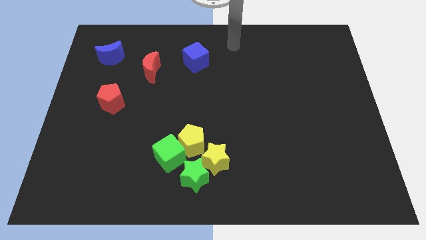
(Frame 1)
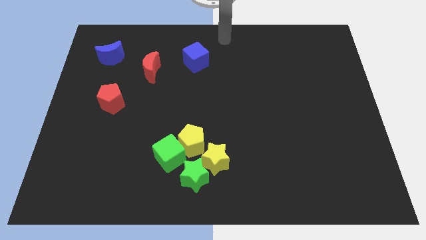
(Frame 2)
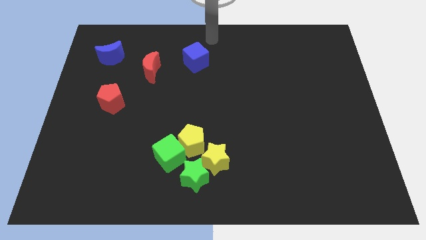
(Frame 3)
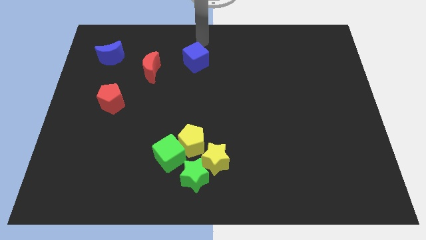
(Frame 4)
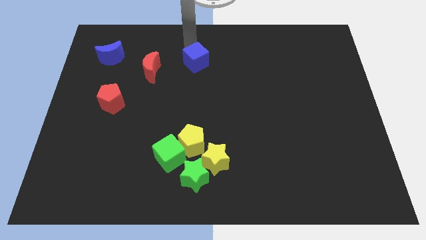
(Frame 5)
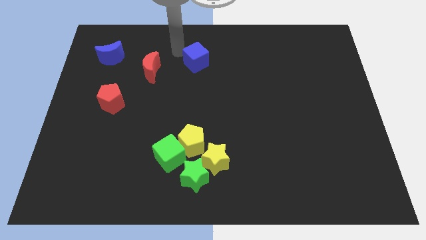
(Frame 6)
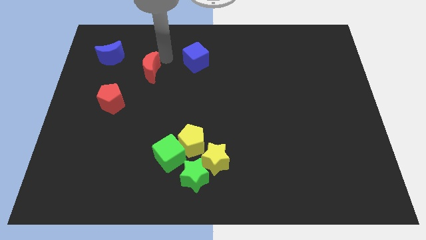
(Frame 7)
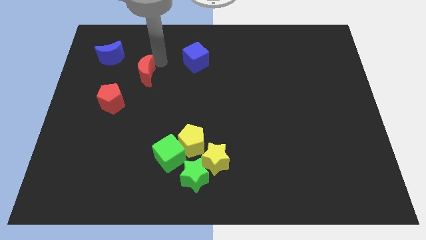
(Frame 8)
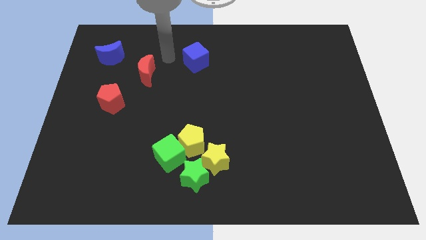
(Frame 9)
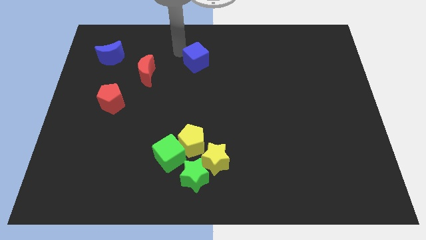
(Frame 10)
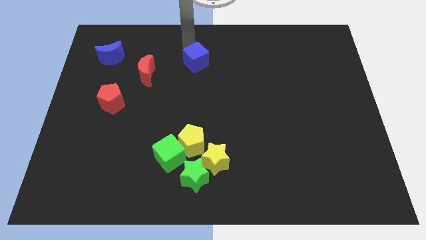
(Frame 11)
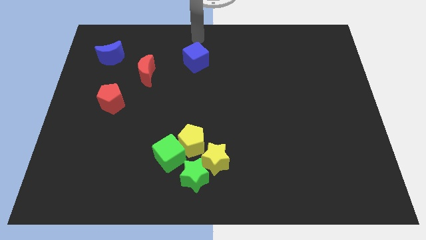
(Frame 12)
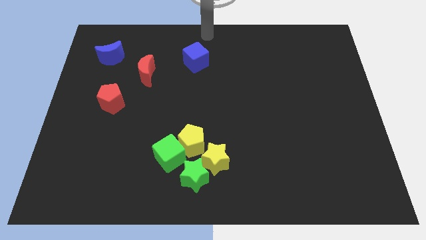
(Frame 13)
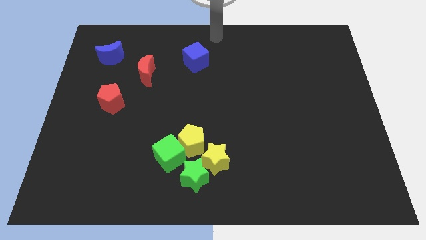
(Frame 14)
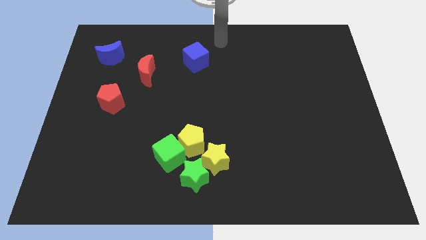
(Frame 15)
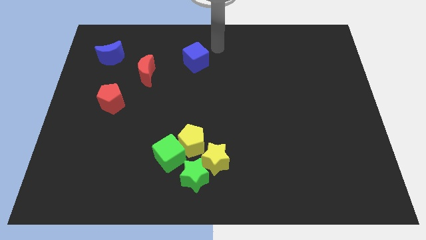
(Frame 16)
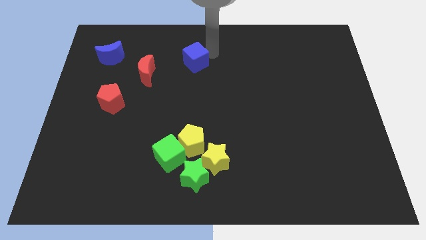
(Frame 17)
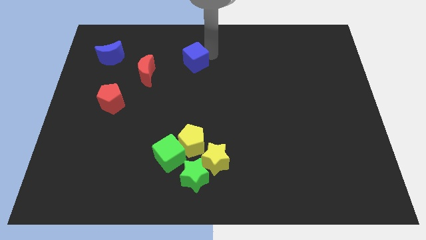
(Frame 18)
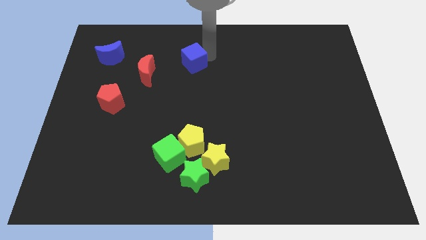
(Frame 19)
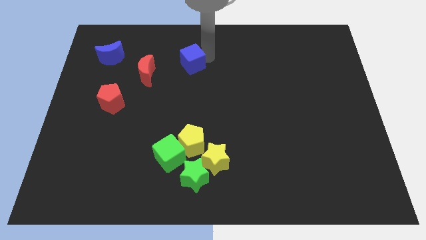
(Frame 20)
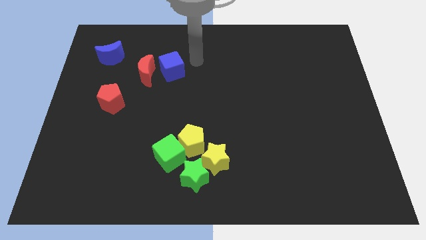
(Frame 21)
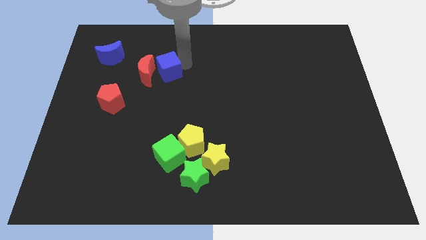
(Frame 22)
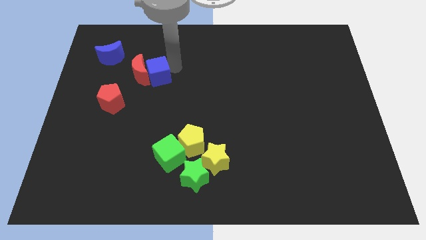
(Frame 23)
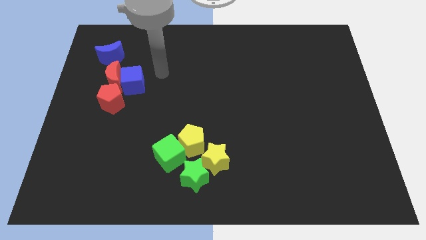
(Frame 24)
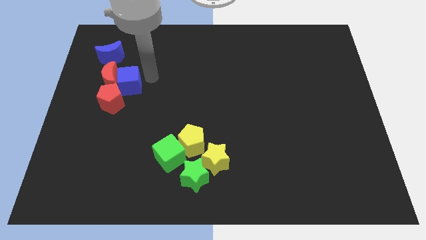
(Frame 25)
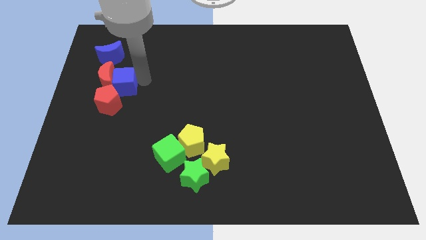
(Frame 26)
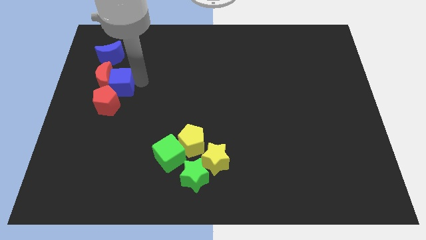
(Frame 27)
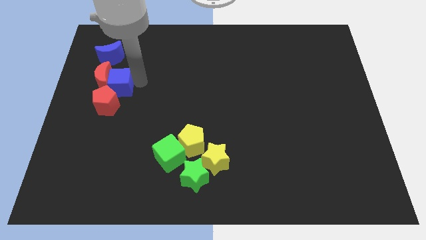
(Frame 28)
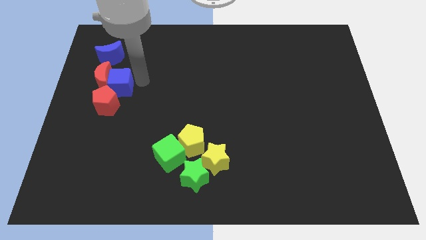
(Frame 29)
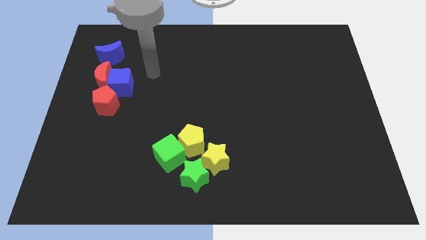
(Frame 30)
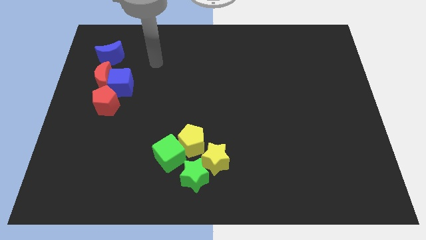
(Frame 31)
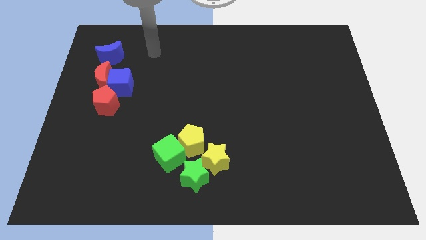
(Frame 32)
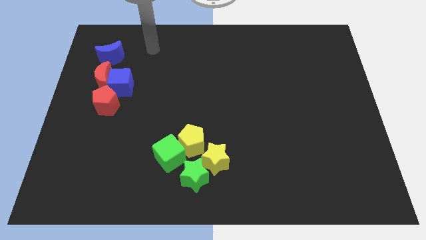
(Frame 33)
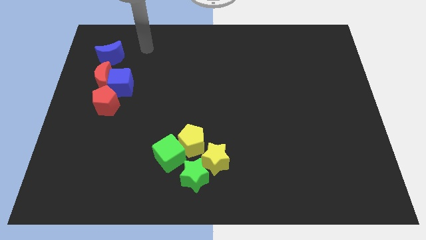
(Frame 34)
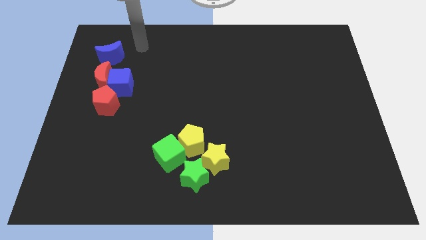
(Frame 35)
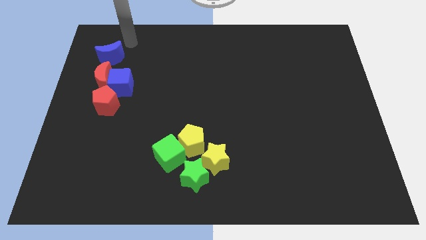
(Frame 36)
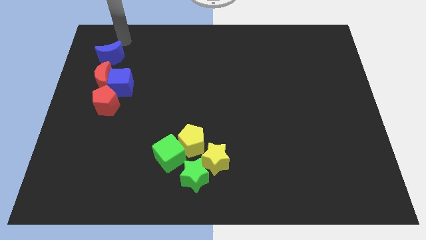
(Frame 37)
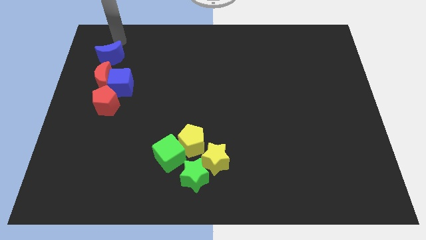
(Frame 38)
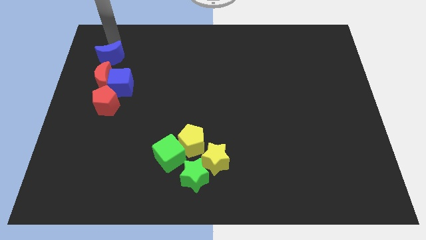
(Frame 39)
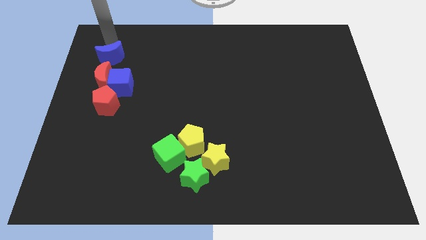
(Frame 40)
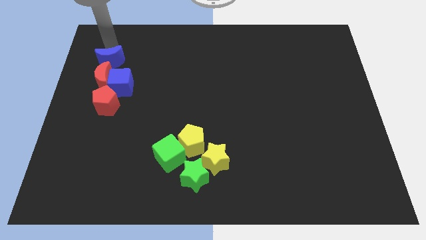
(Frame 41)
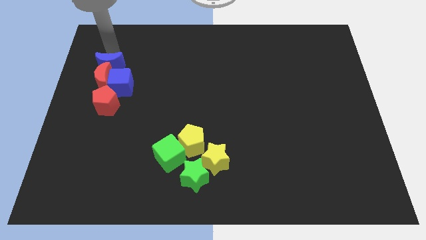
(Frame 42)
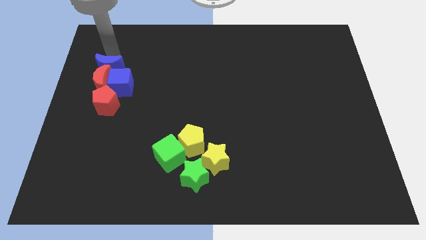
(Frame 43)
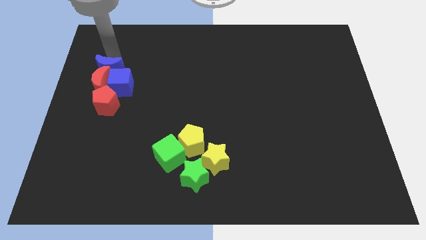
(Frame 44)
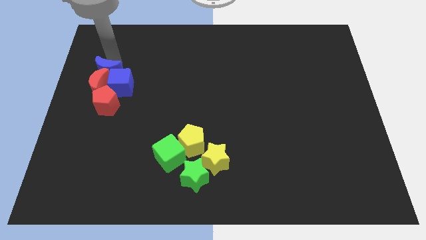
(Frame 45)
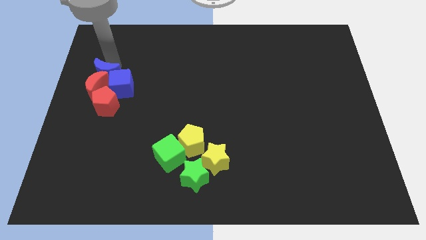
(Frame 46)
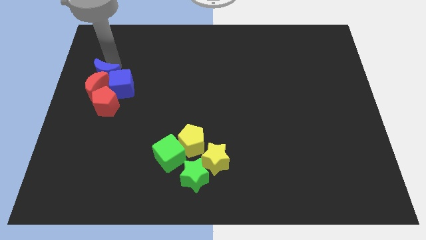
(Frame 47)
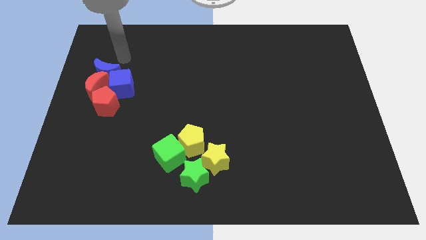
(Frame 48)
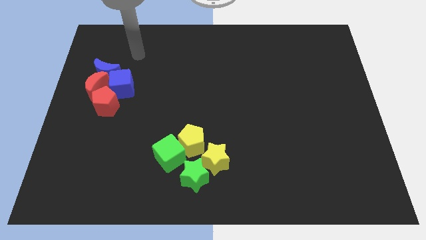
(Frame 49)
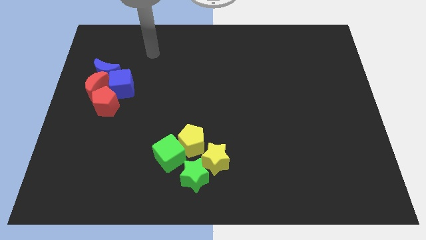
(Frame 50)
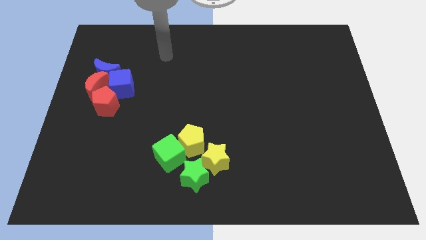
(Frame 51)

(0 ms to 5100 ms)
make a group of blocks with both the crescentsblue cube and red pentagon

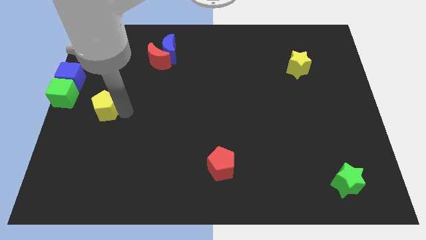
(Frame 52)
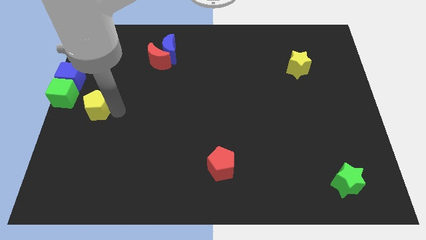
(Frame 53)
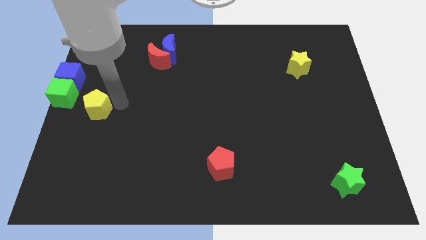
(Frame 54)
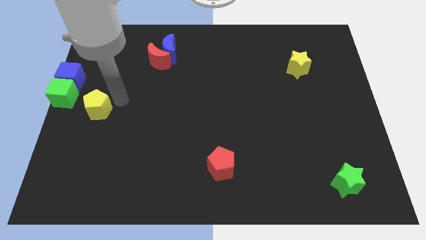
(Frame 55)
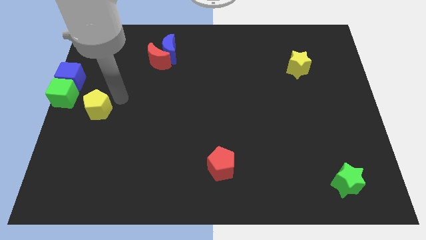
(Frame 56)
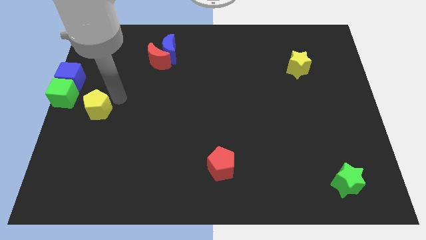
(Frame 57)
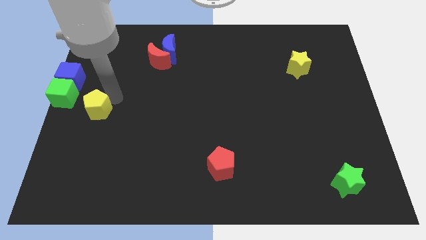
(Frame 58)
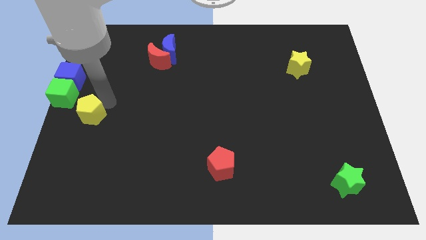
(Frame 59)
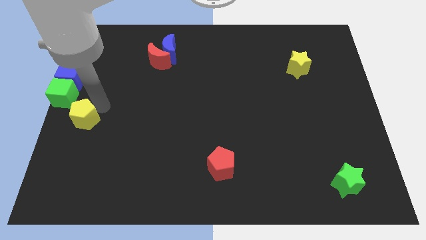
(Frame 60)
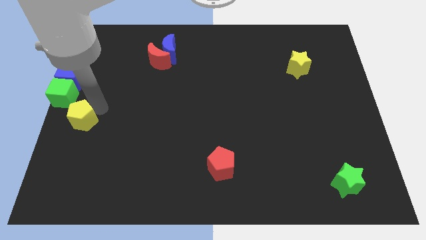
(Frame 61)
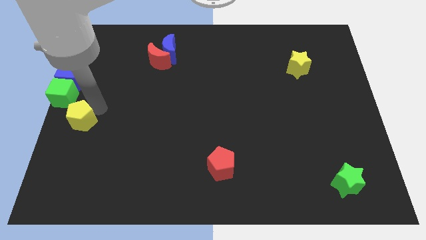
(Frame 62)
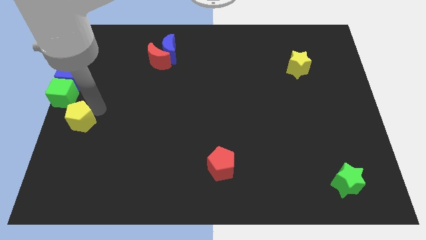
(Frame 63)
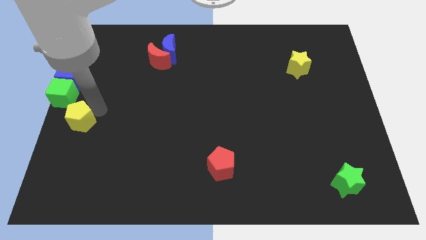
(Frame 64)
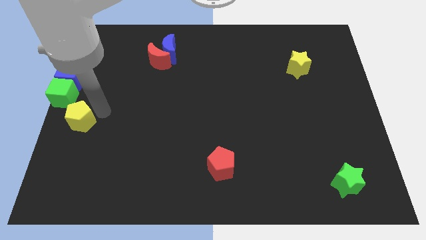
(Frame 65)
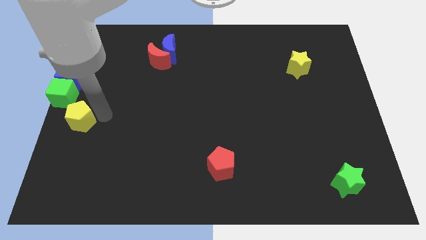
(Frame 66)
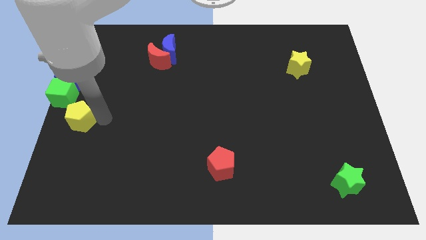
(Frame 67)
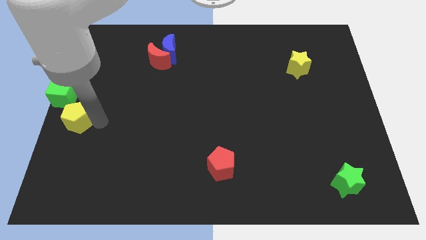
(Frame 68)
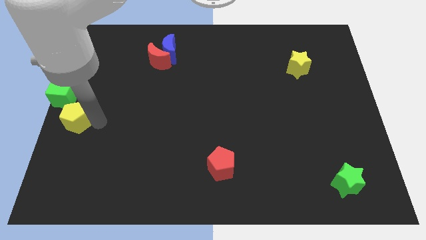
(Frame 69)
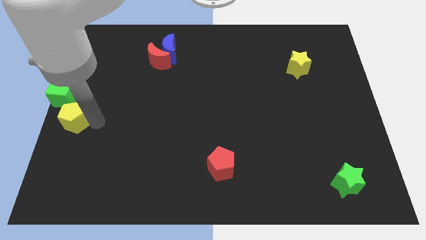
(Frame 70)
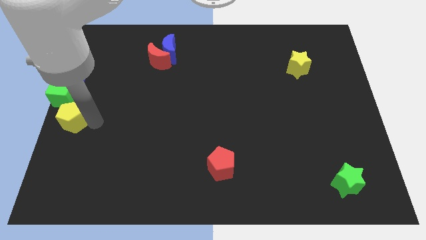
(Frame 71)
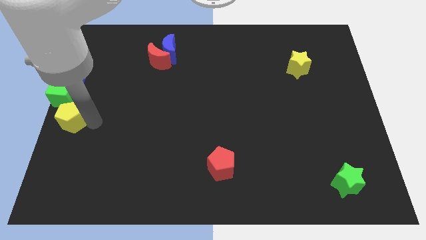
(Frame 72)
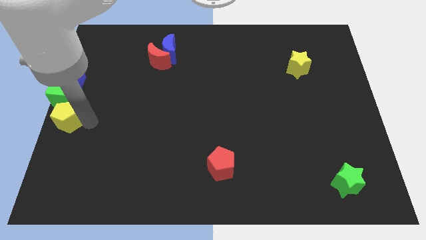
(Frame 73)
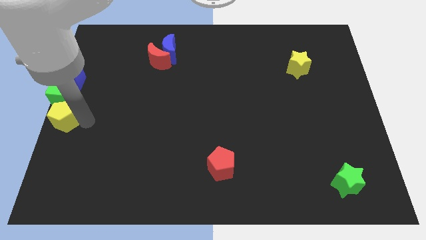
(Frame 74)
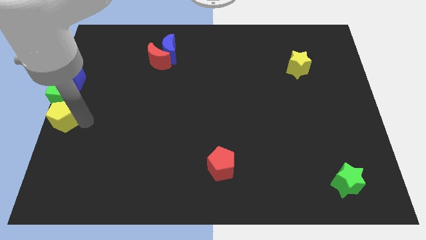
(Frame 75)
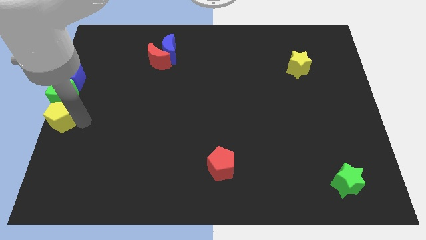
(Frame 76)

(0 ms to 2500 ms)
place yellow pentagon below the green cube

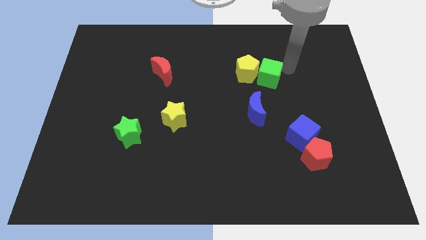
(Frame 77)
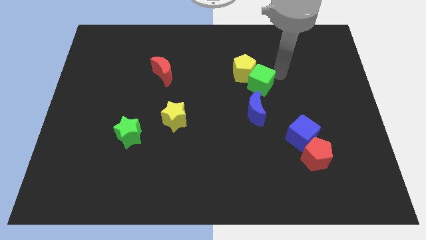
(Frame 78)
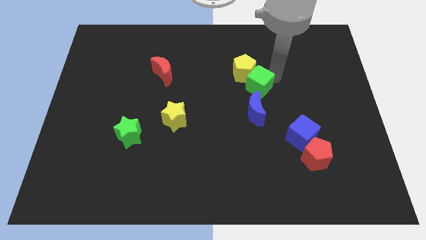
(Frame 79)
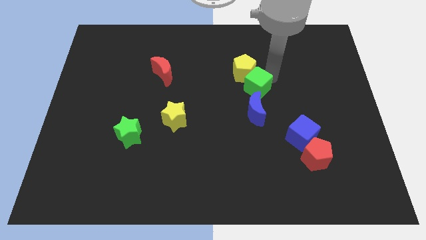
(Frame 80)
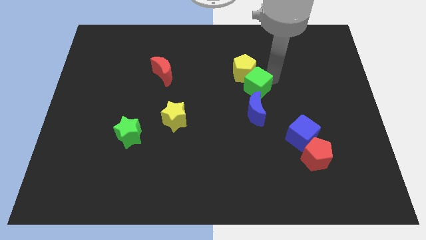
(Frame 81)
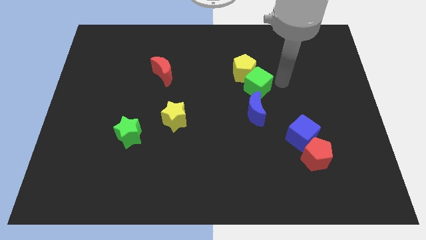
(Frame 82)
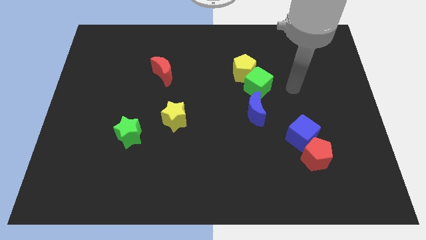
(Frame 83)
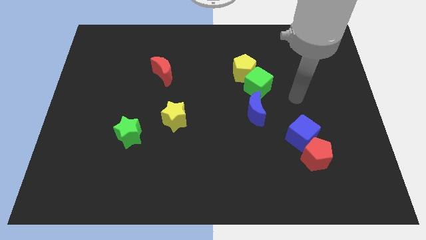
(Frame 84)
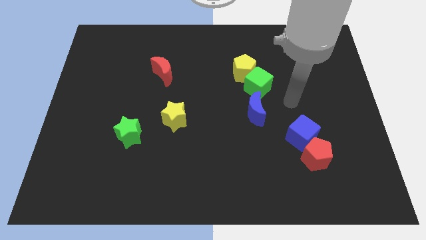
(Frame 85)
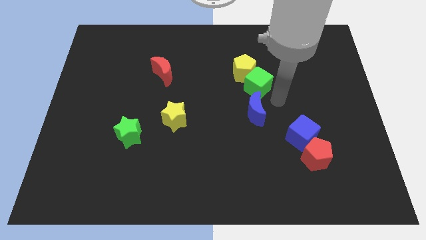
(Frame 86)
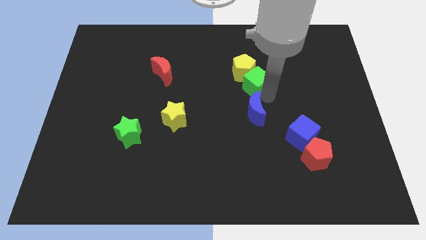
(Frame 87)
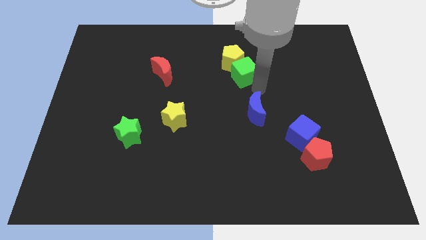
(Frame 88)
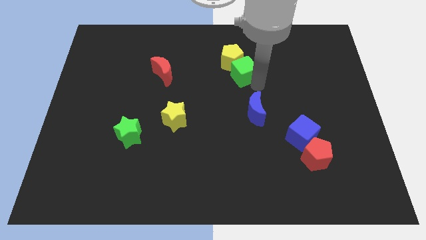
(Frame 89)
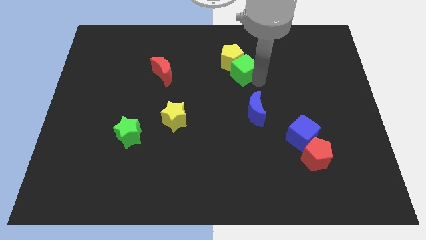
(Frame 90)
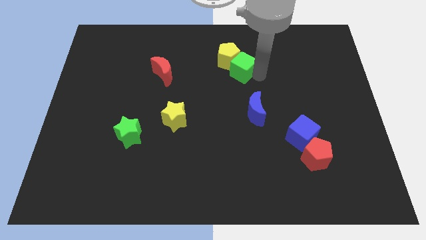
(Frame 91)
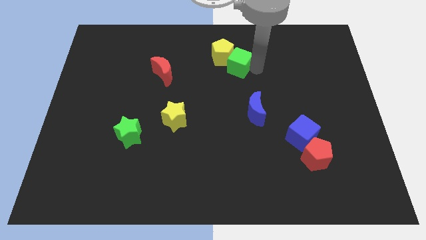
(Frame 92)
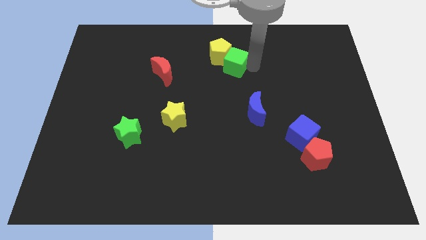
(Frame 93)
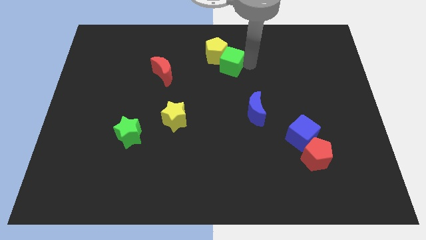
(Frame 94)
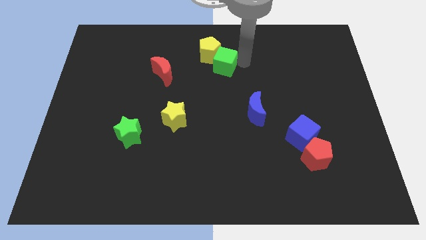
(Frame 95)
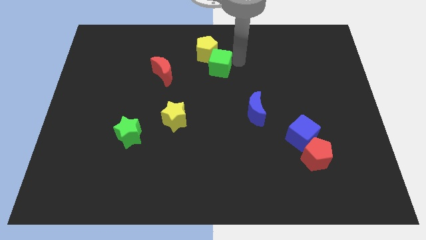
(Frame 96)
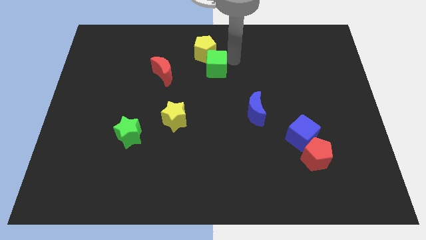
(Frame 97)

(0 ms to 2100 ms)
move the yellow pentagon with the green cube towards the top left corner
